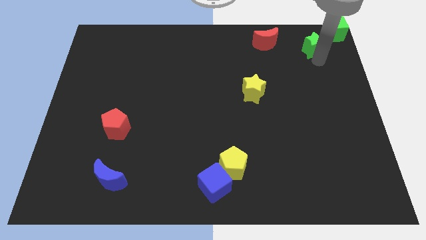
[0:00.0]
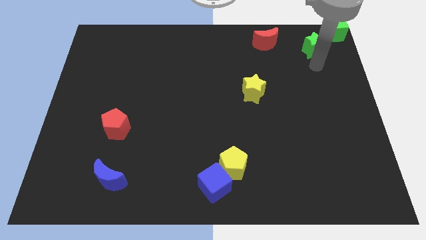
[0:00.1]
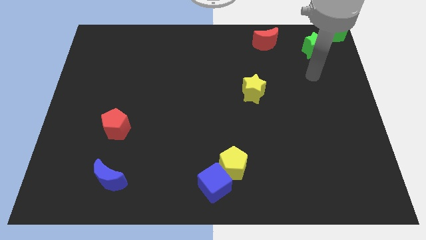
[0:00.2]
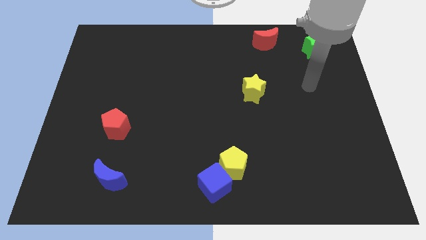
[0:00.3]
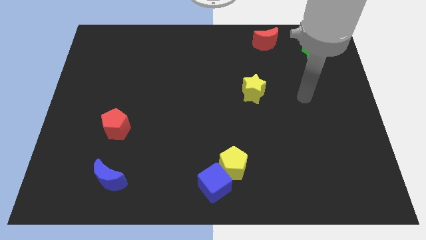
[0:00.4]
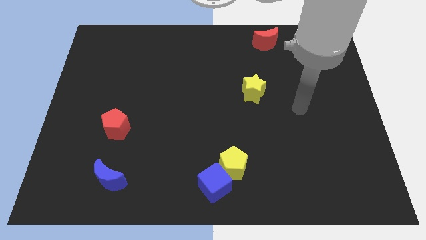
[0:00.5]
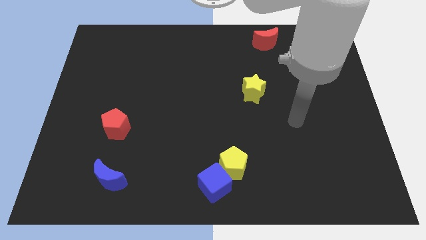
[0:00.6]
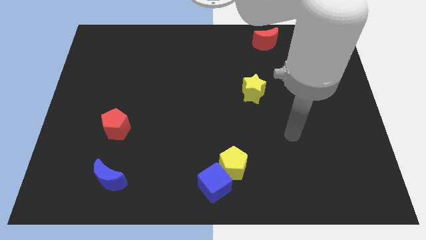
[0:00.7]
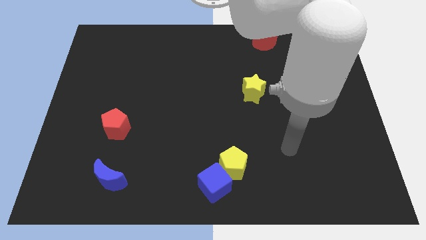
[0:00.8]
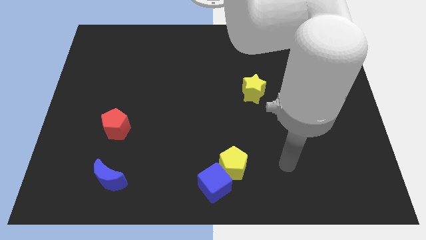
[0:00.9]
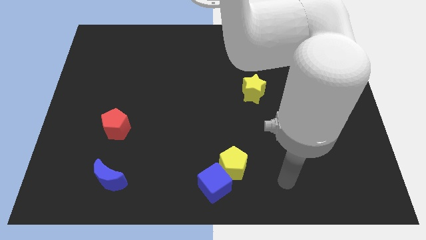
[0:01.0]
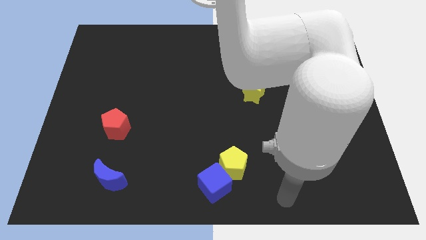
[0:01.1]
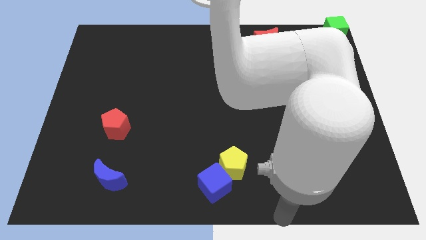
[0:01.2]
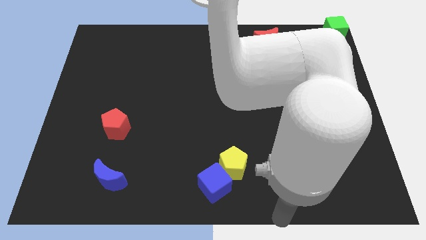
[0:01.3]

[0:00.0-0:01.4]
move the arm to the bottom center of the board

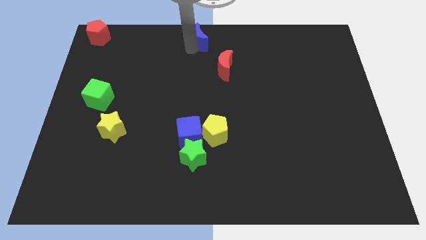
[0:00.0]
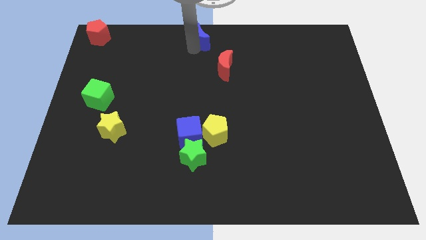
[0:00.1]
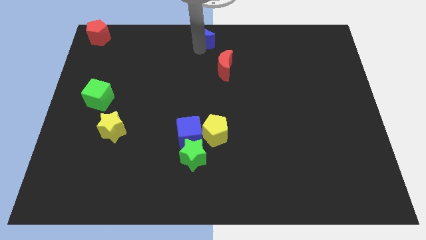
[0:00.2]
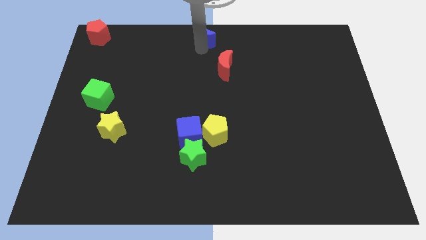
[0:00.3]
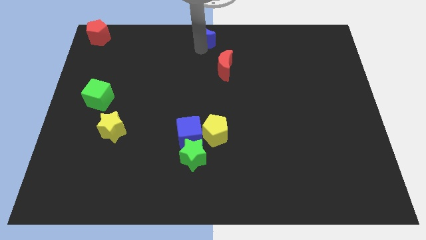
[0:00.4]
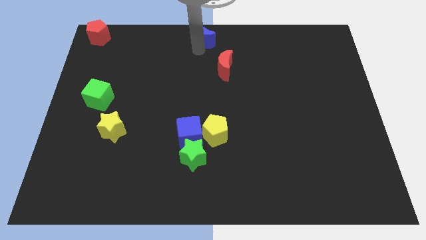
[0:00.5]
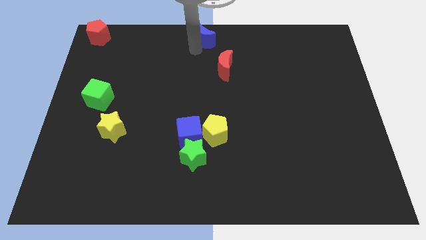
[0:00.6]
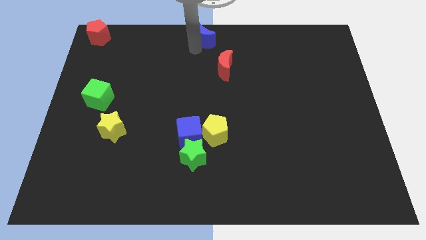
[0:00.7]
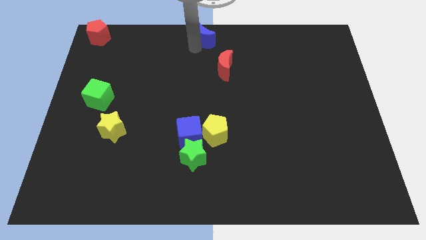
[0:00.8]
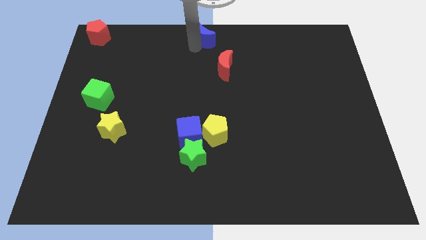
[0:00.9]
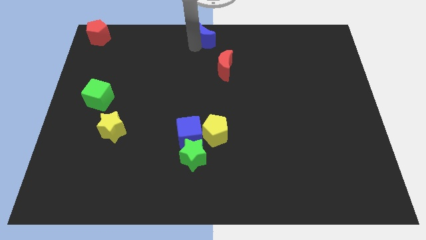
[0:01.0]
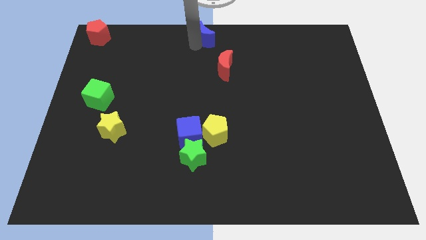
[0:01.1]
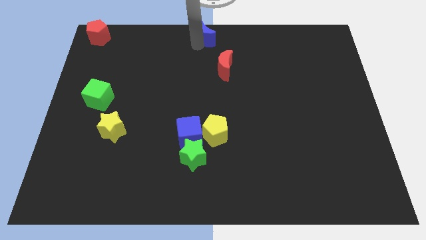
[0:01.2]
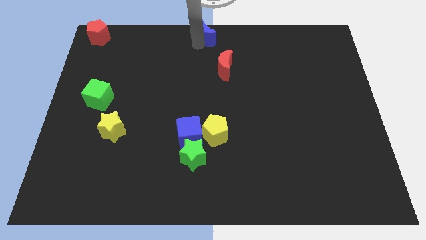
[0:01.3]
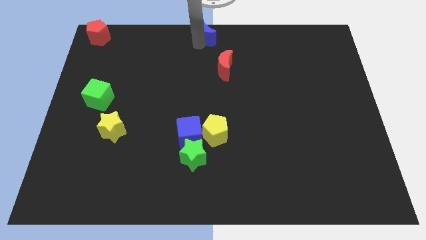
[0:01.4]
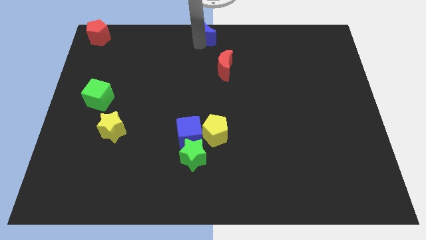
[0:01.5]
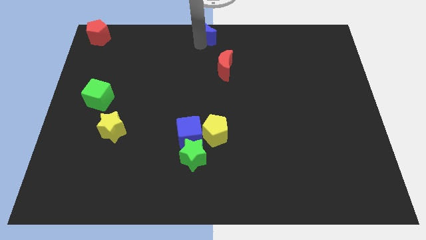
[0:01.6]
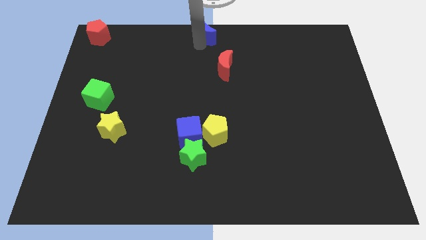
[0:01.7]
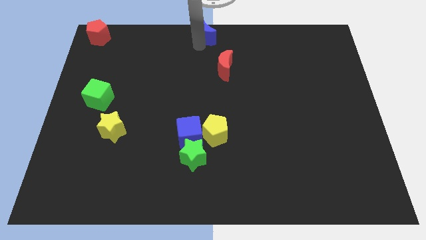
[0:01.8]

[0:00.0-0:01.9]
push blue moon to the top center

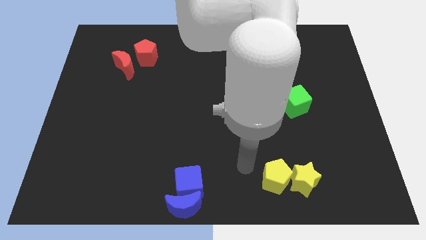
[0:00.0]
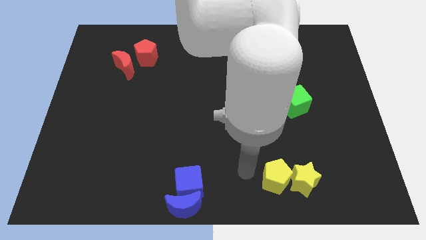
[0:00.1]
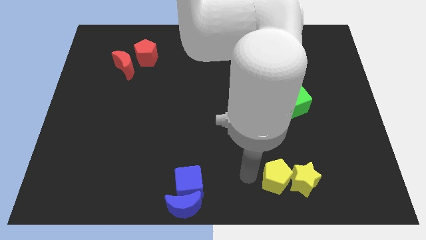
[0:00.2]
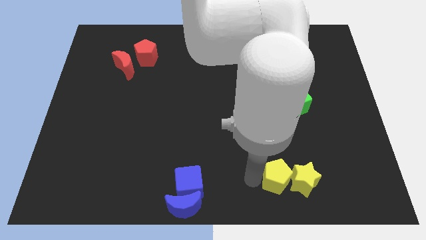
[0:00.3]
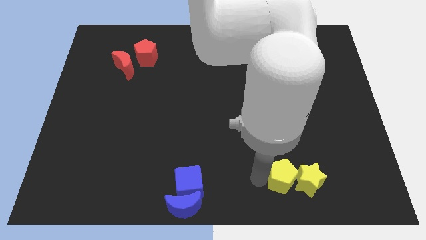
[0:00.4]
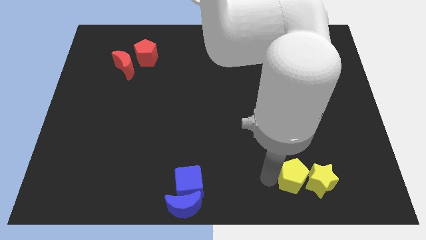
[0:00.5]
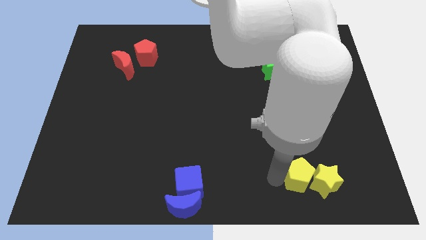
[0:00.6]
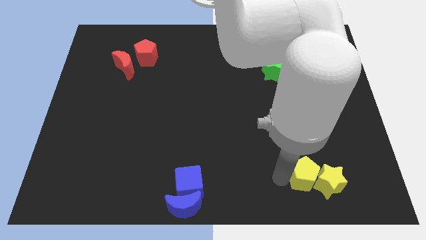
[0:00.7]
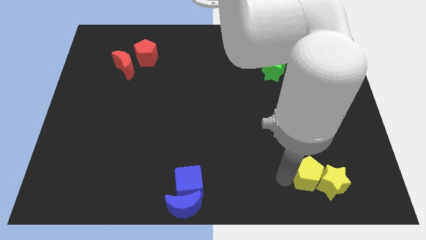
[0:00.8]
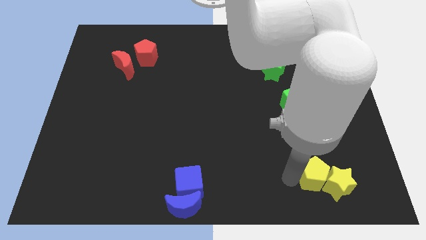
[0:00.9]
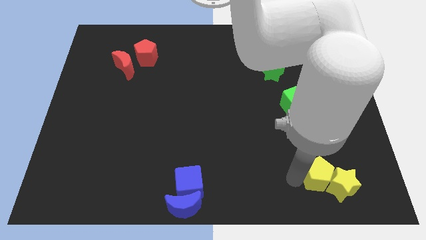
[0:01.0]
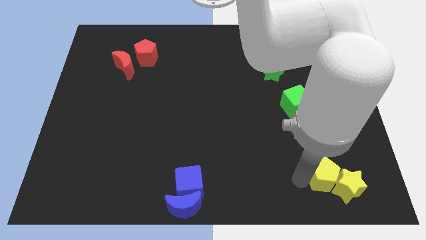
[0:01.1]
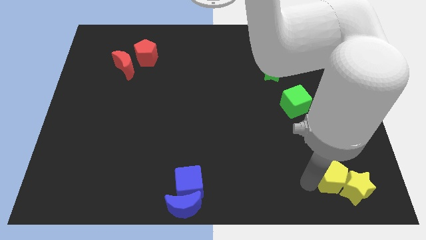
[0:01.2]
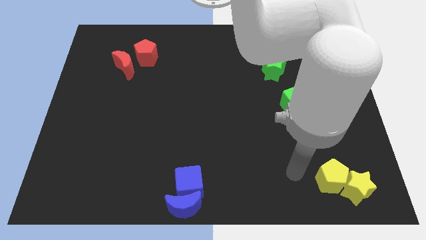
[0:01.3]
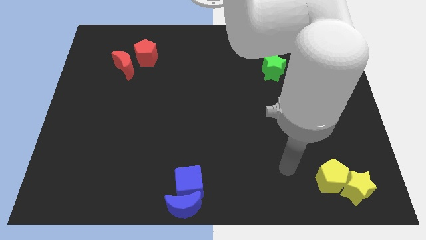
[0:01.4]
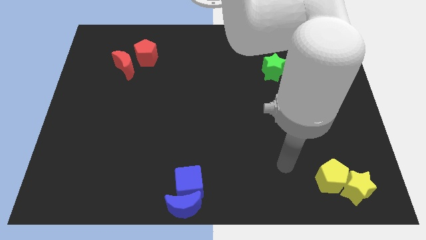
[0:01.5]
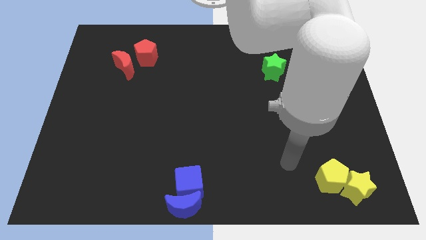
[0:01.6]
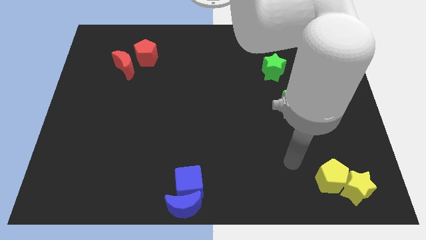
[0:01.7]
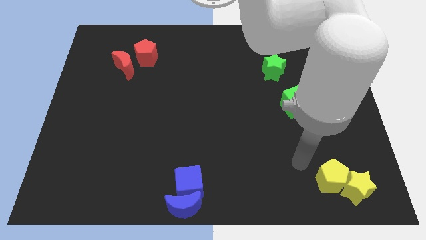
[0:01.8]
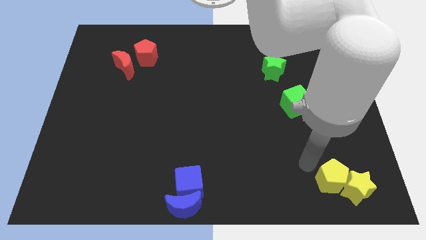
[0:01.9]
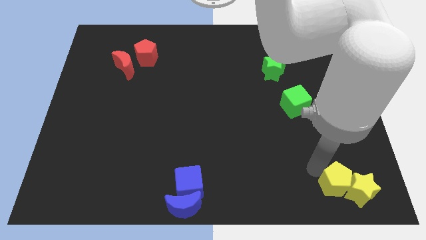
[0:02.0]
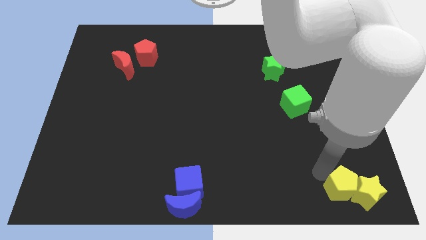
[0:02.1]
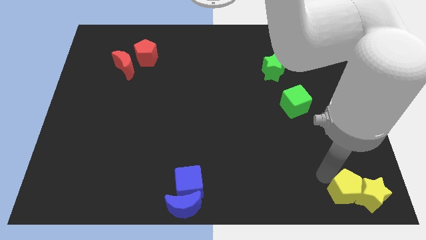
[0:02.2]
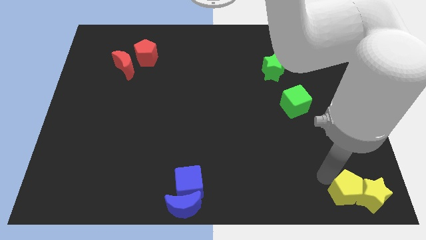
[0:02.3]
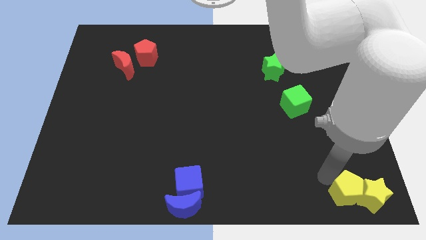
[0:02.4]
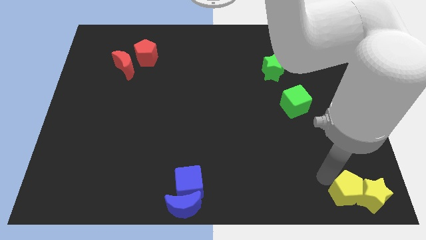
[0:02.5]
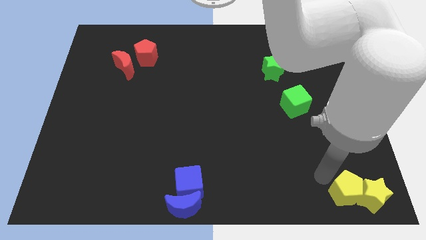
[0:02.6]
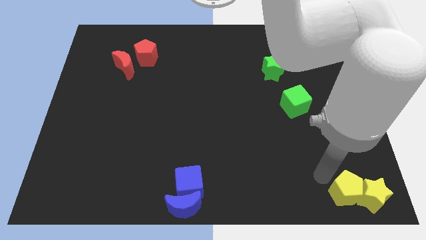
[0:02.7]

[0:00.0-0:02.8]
push the yellow pentagon and yellow star to the bottom right corner together

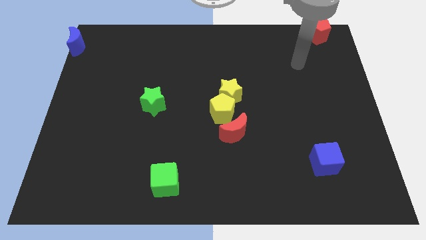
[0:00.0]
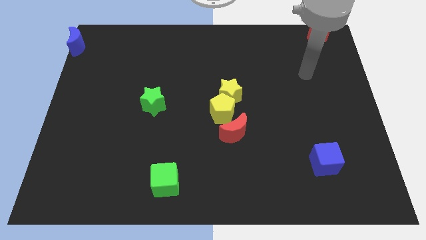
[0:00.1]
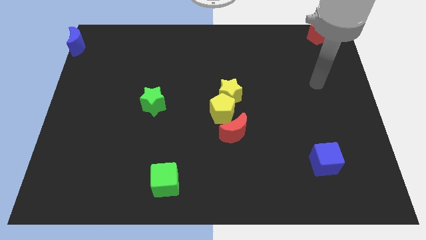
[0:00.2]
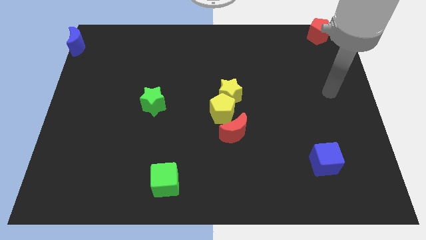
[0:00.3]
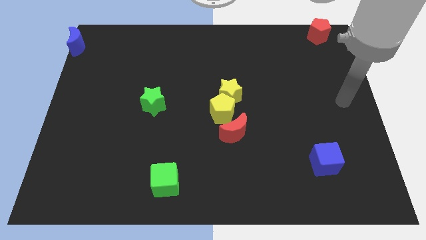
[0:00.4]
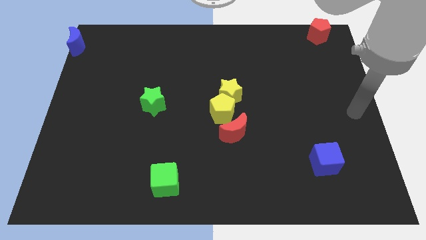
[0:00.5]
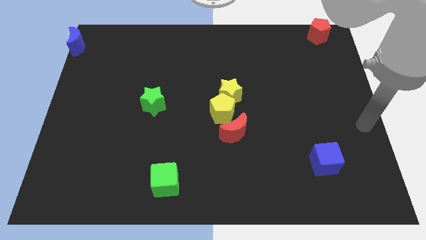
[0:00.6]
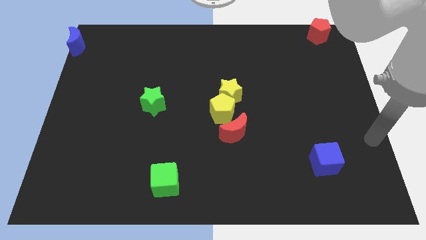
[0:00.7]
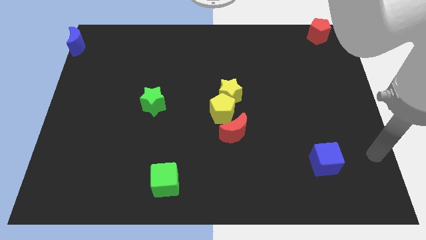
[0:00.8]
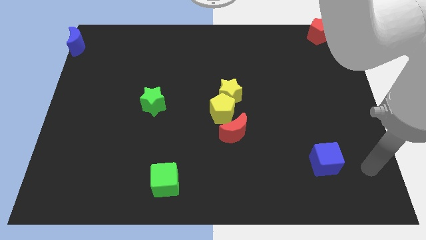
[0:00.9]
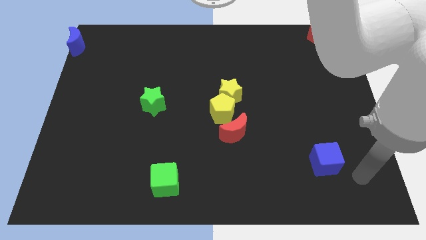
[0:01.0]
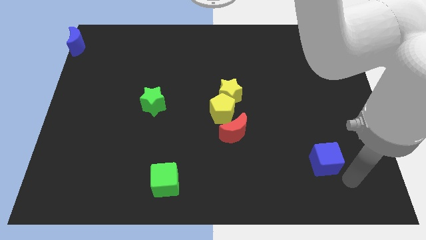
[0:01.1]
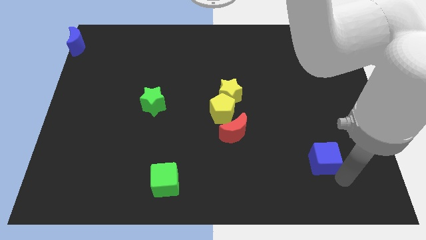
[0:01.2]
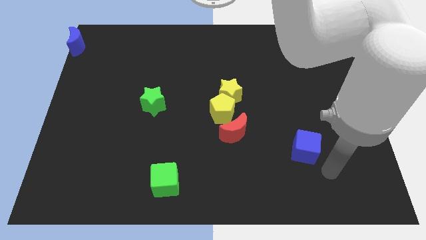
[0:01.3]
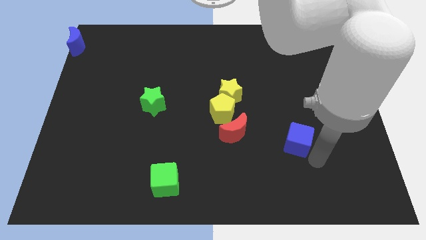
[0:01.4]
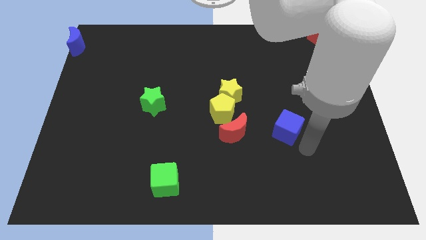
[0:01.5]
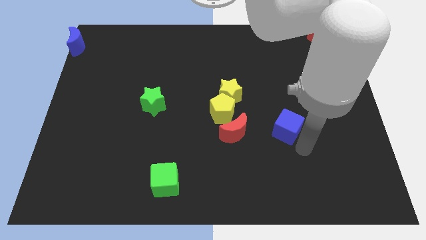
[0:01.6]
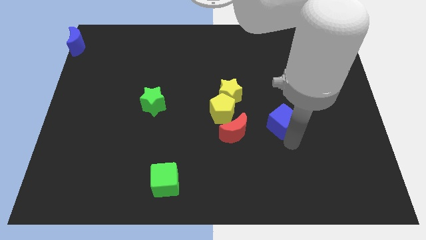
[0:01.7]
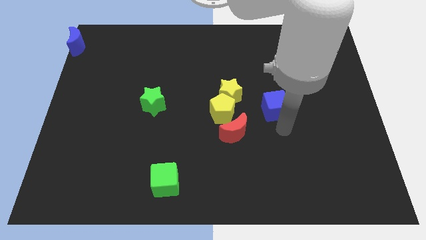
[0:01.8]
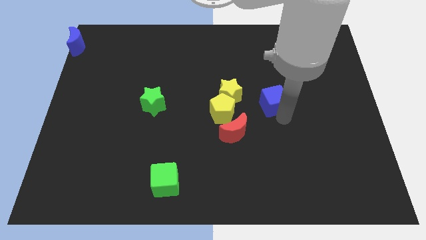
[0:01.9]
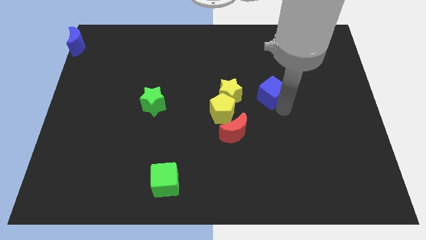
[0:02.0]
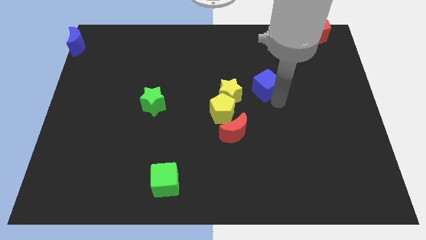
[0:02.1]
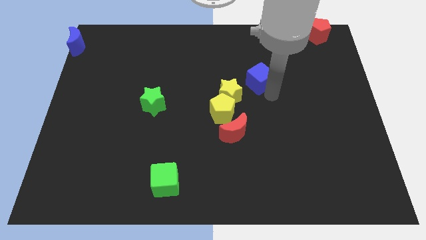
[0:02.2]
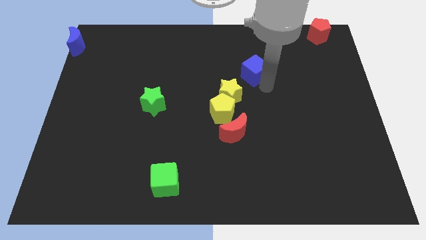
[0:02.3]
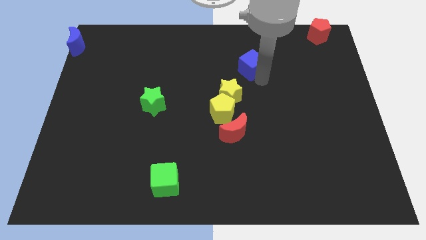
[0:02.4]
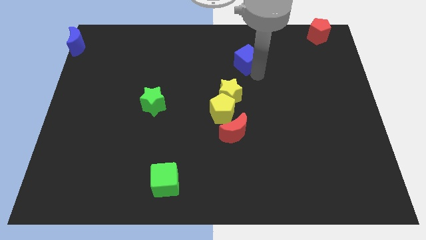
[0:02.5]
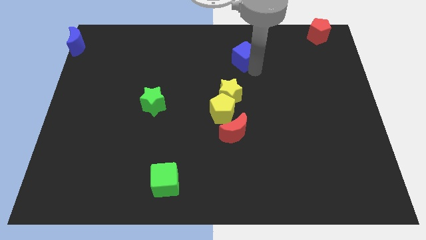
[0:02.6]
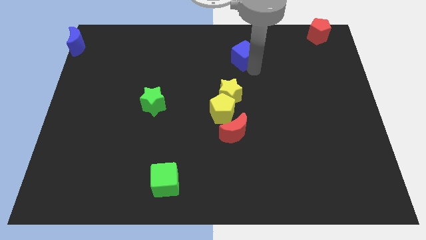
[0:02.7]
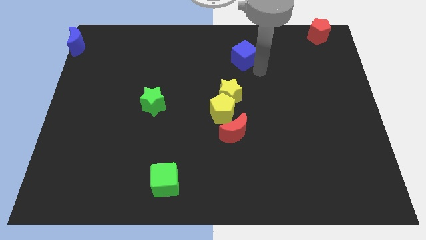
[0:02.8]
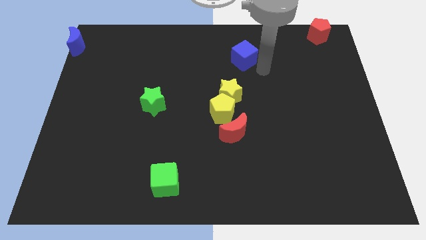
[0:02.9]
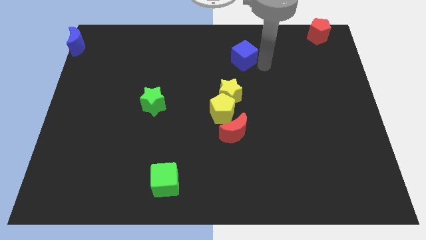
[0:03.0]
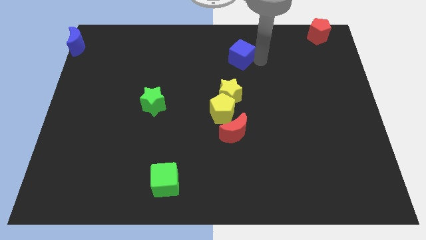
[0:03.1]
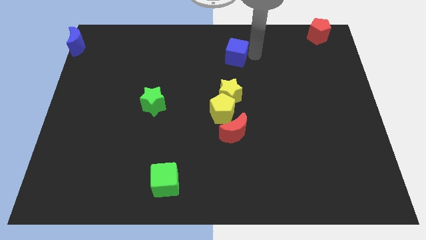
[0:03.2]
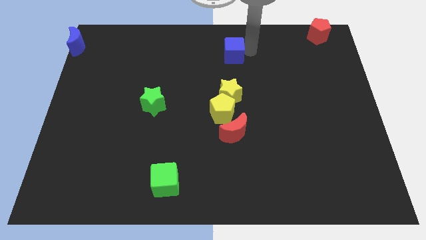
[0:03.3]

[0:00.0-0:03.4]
move the blue cube above the yellow star
